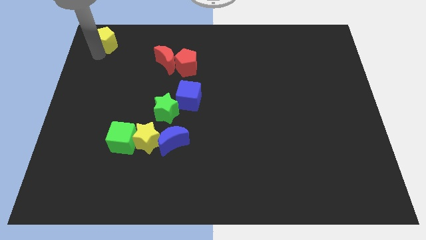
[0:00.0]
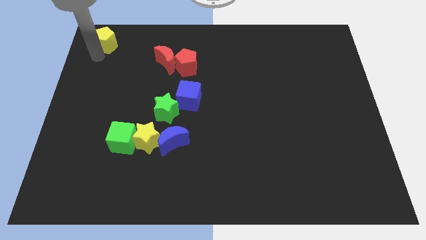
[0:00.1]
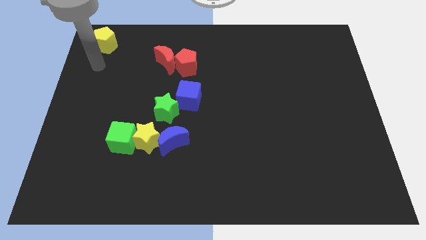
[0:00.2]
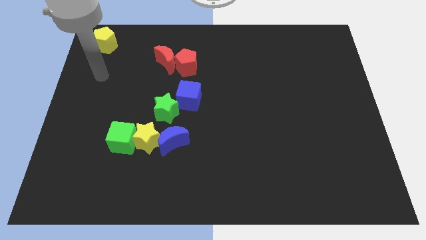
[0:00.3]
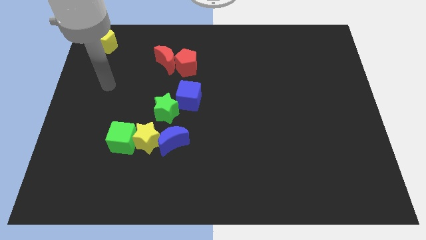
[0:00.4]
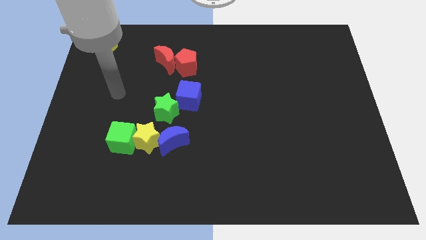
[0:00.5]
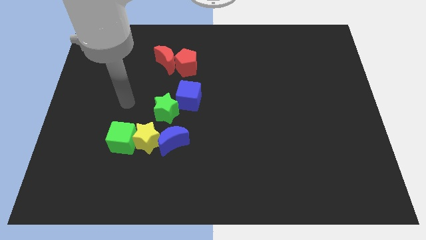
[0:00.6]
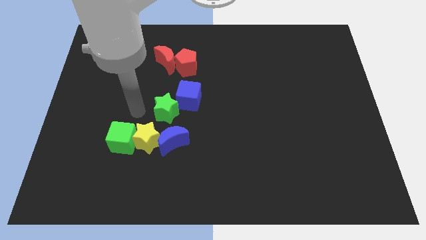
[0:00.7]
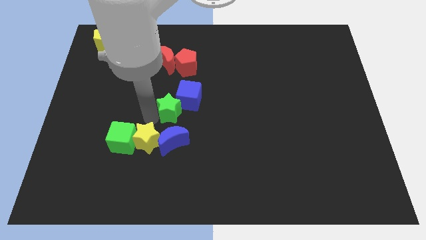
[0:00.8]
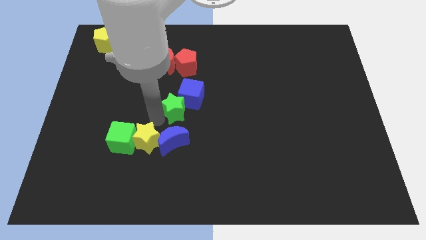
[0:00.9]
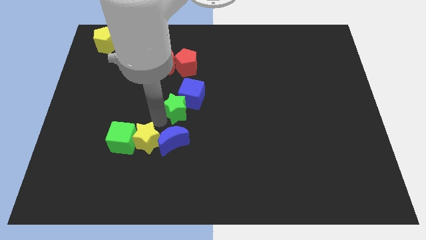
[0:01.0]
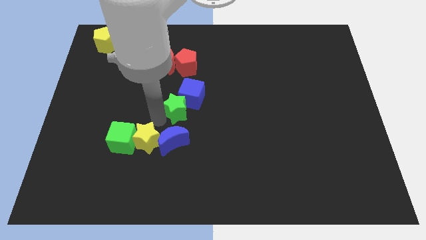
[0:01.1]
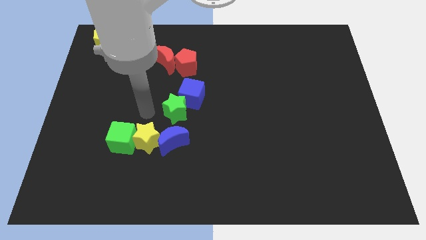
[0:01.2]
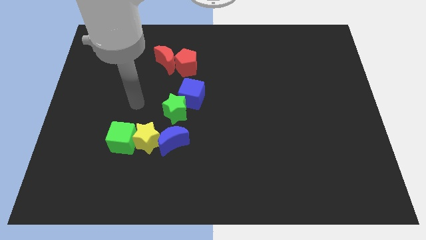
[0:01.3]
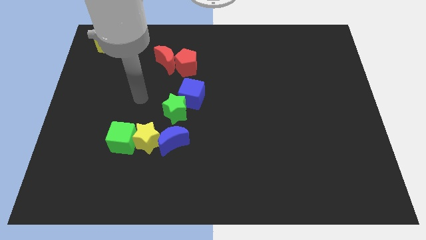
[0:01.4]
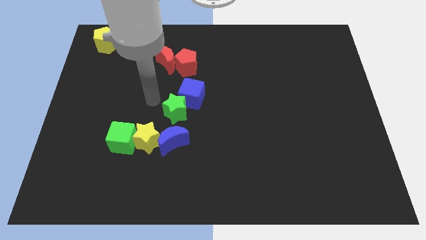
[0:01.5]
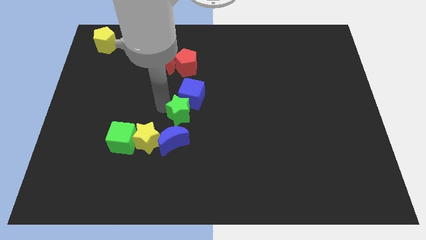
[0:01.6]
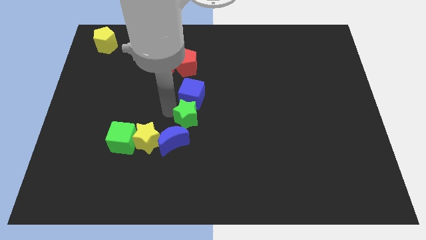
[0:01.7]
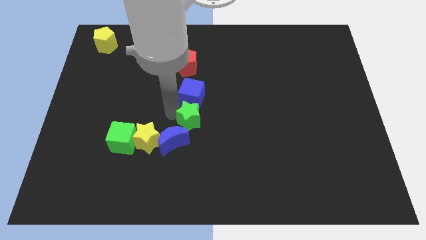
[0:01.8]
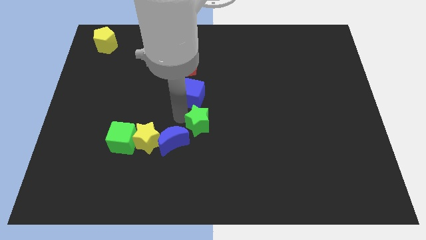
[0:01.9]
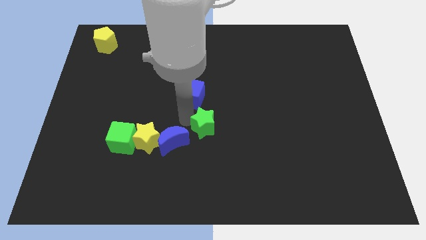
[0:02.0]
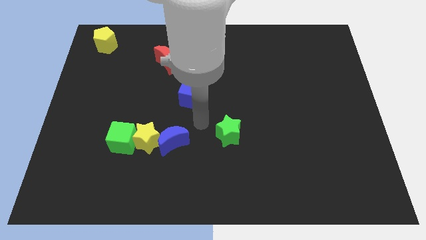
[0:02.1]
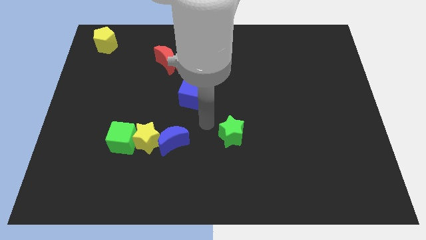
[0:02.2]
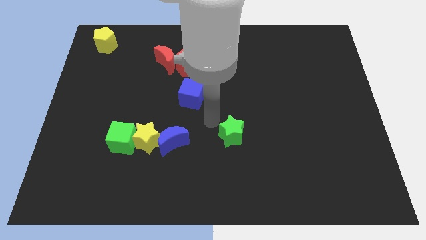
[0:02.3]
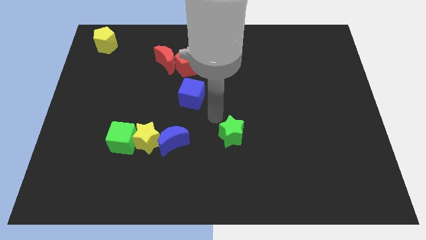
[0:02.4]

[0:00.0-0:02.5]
push the green star to the bottom right of the blue cube

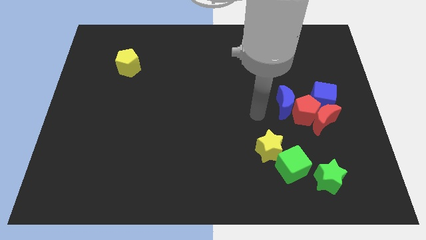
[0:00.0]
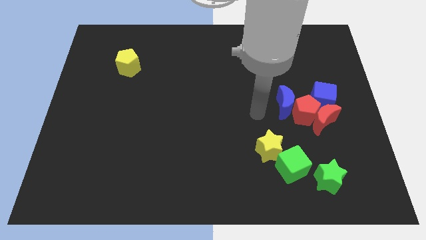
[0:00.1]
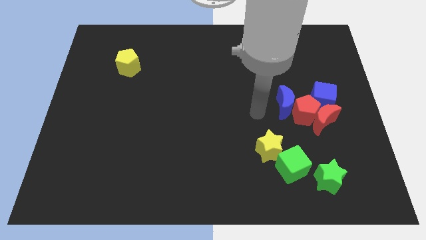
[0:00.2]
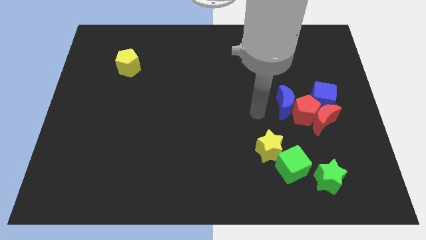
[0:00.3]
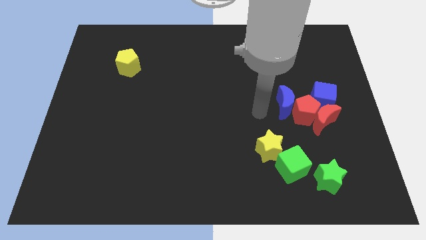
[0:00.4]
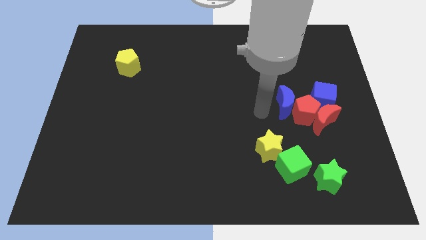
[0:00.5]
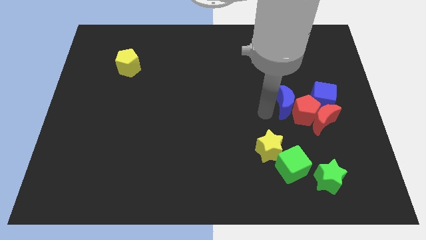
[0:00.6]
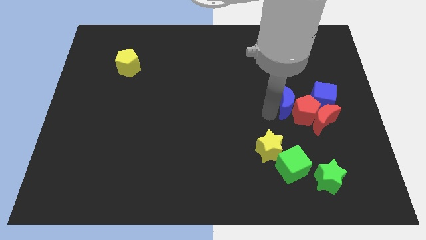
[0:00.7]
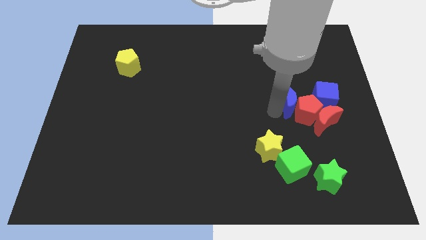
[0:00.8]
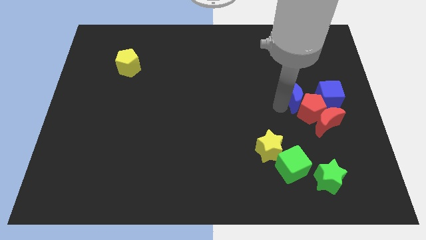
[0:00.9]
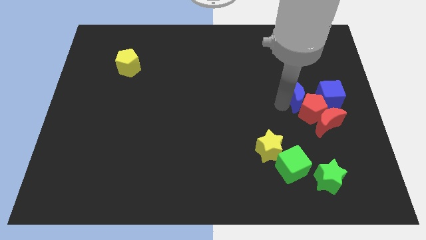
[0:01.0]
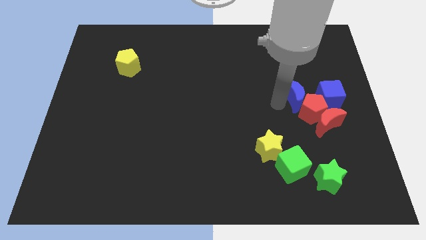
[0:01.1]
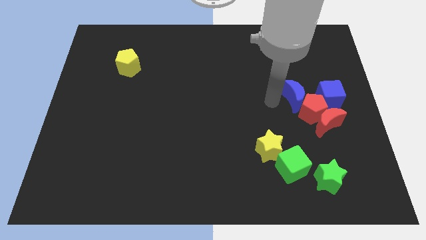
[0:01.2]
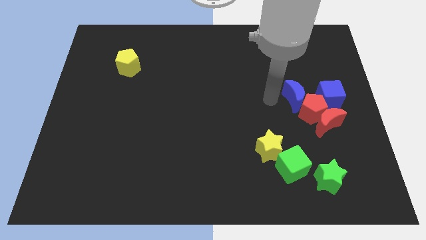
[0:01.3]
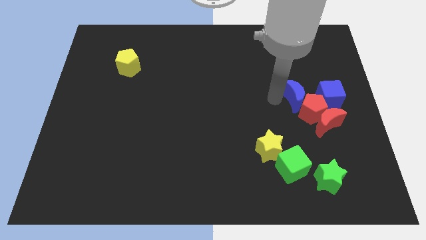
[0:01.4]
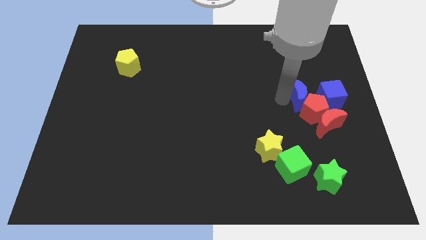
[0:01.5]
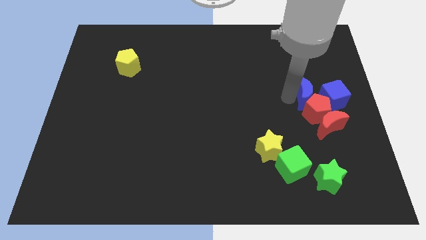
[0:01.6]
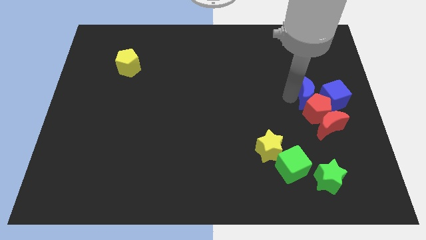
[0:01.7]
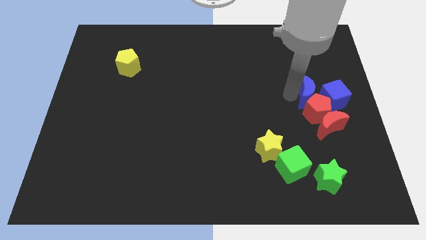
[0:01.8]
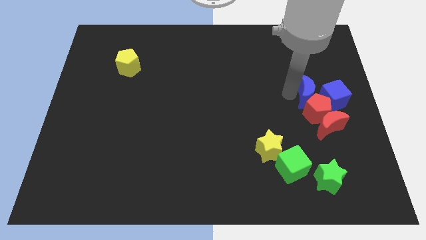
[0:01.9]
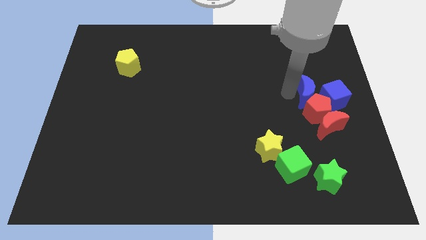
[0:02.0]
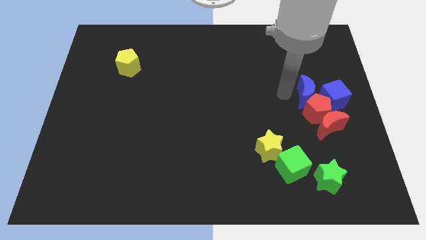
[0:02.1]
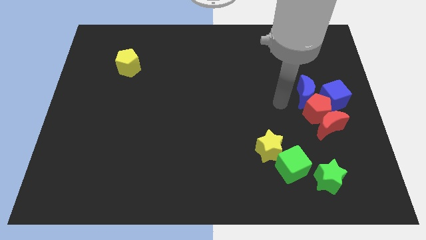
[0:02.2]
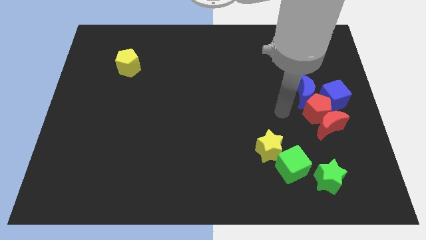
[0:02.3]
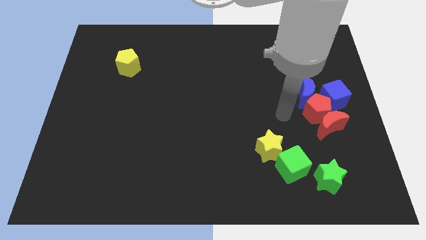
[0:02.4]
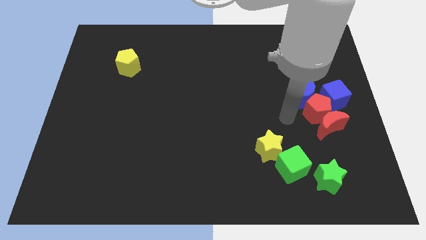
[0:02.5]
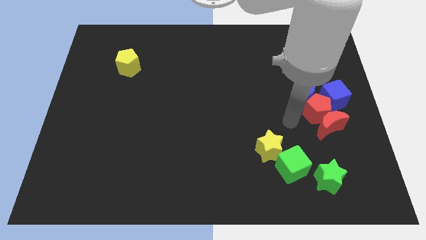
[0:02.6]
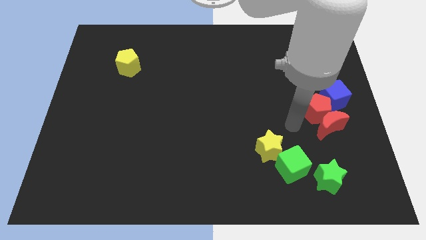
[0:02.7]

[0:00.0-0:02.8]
push blue moon into red pentagon

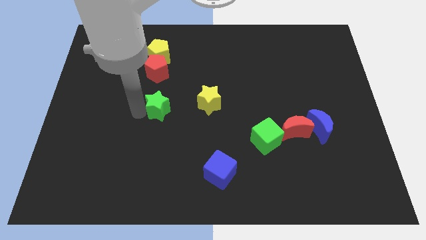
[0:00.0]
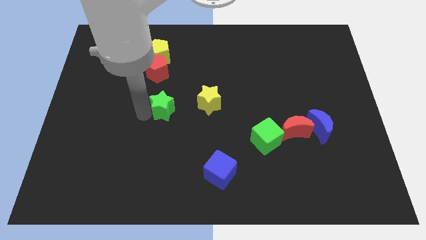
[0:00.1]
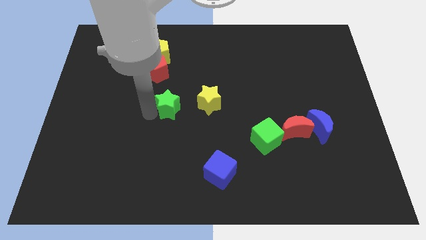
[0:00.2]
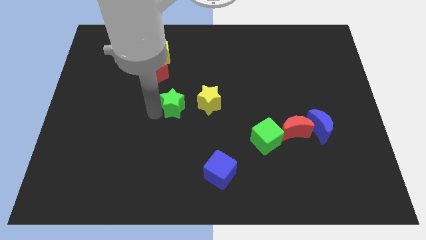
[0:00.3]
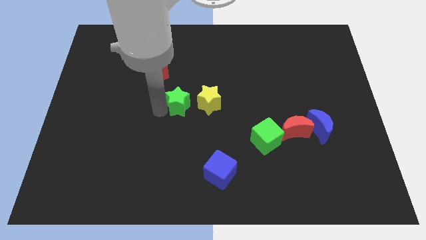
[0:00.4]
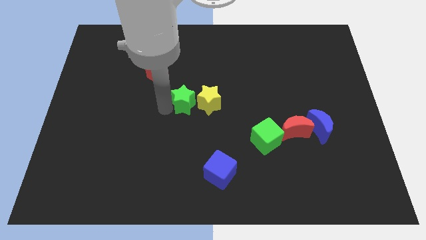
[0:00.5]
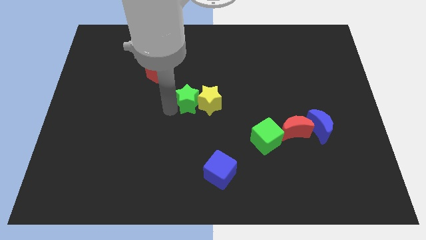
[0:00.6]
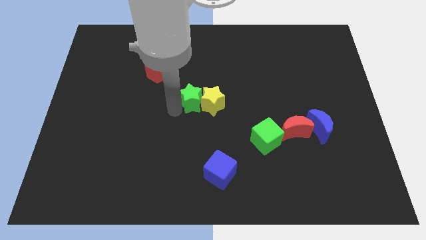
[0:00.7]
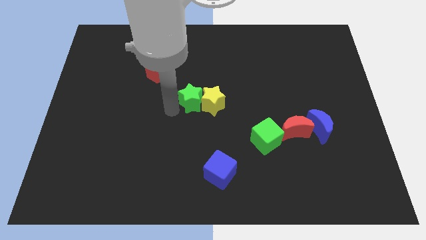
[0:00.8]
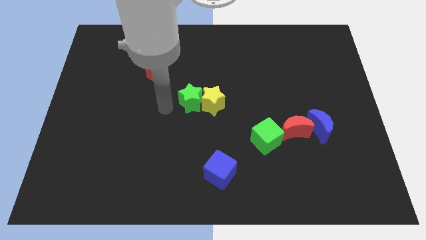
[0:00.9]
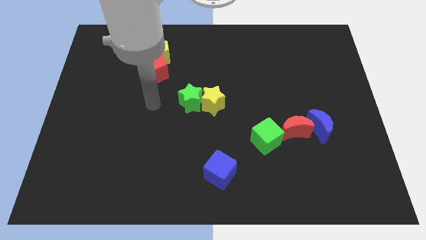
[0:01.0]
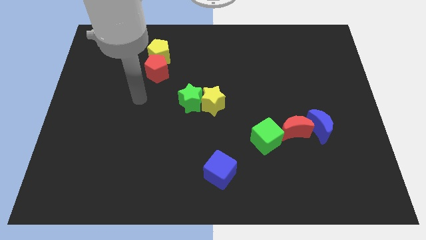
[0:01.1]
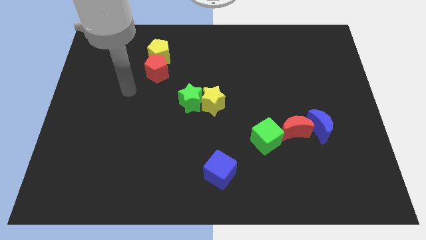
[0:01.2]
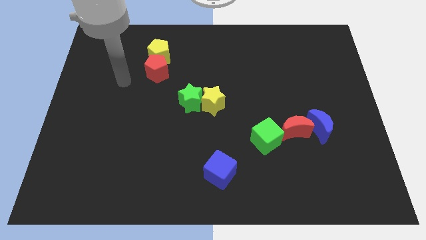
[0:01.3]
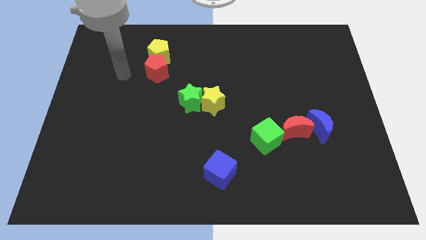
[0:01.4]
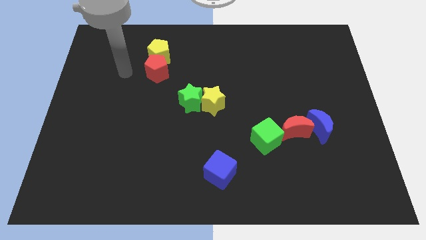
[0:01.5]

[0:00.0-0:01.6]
push the green star to the left of the yellow star

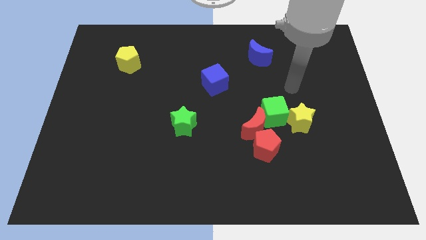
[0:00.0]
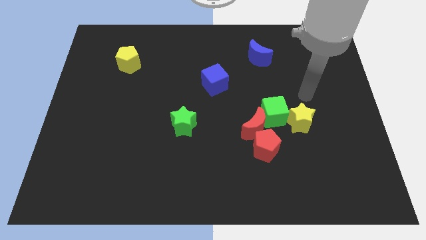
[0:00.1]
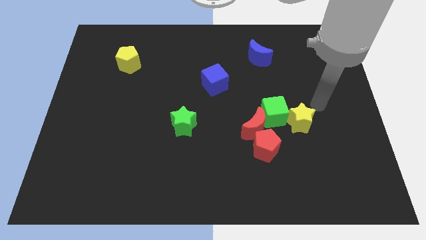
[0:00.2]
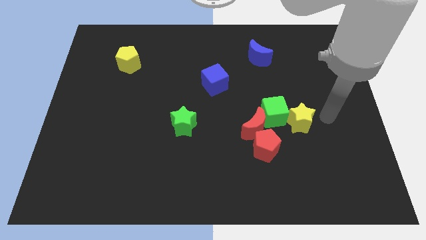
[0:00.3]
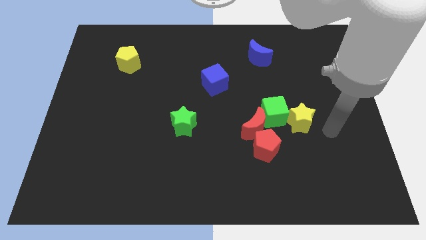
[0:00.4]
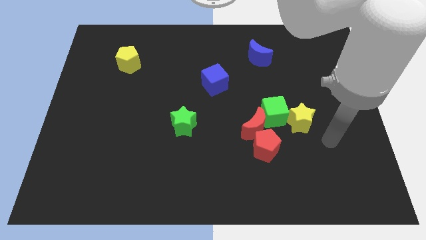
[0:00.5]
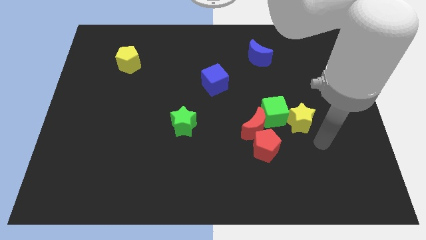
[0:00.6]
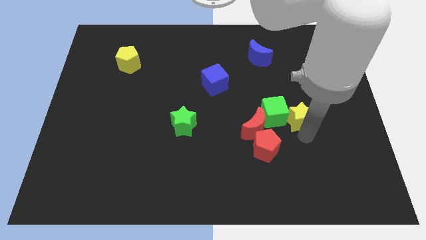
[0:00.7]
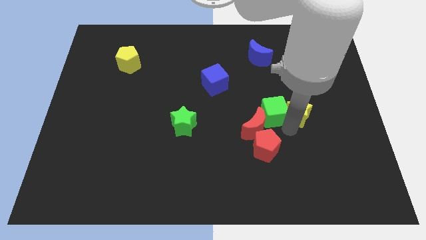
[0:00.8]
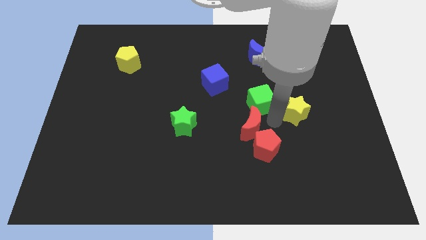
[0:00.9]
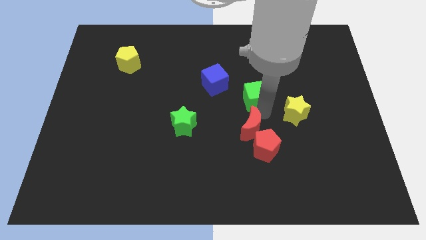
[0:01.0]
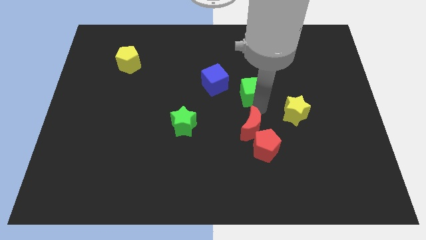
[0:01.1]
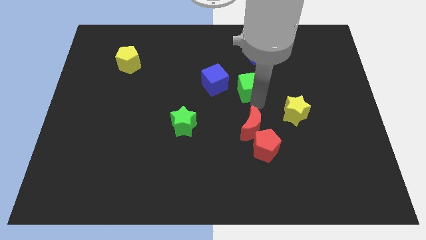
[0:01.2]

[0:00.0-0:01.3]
separate the green cube from the group of blocks

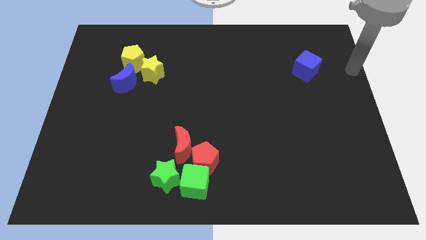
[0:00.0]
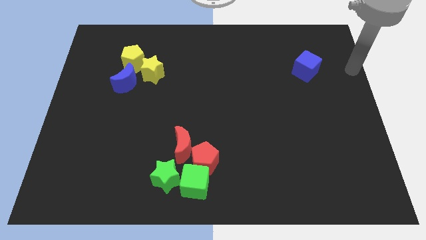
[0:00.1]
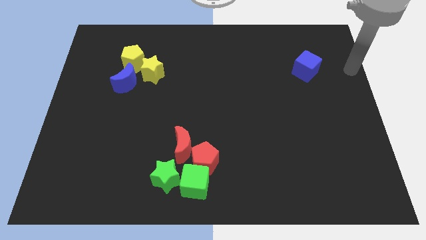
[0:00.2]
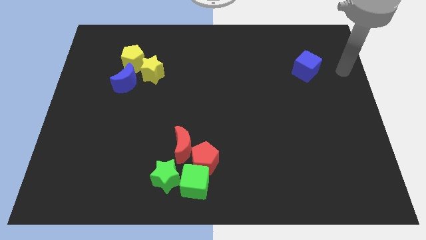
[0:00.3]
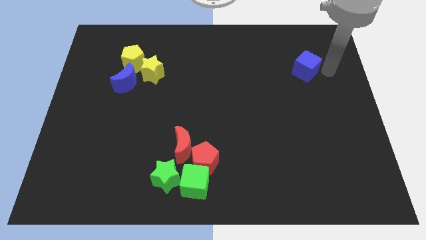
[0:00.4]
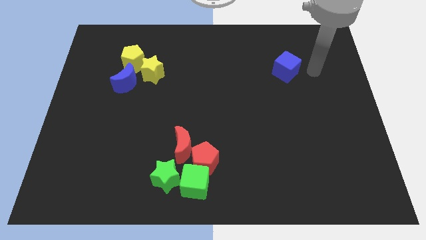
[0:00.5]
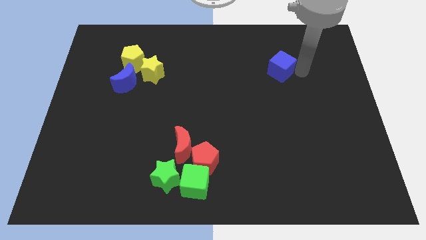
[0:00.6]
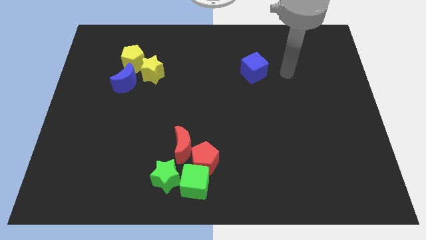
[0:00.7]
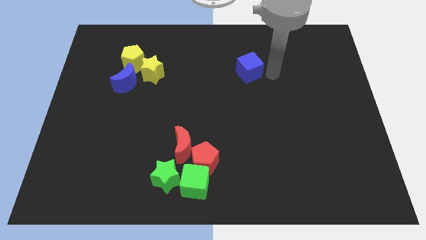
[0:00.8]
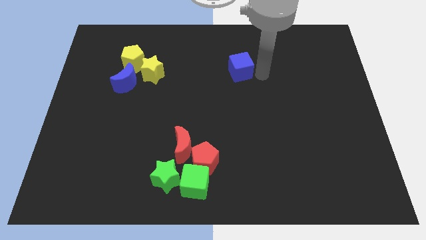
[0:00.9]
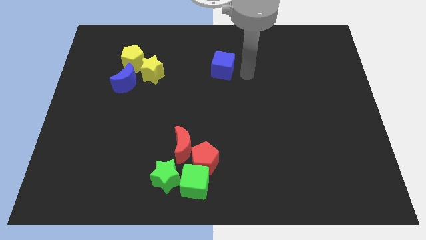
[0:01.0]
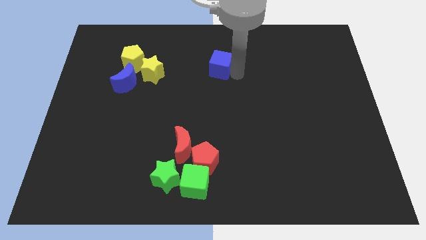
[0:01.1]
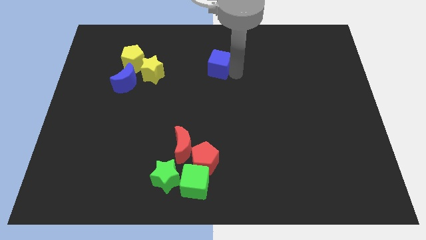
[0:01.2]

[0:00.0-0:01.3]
move the blue cube towards the left side
